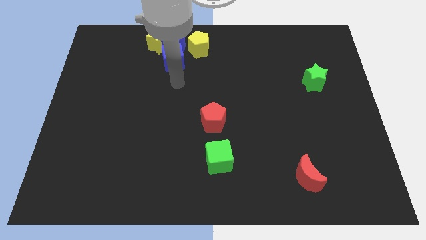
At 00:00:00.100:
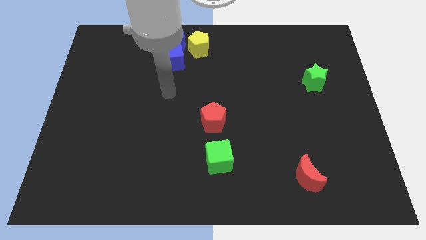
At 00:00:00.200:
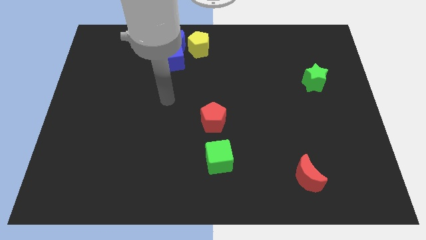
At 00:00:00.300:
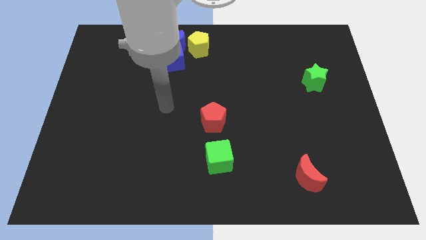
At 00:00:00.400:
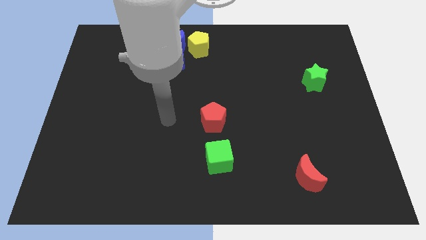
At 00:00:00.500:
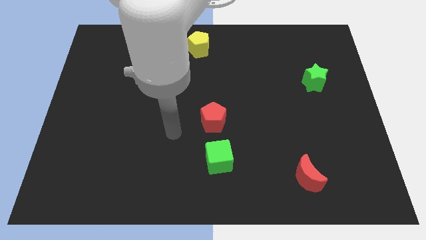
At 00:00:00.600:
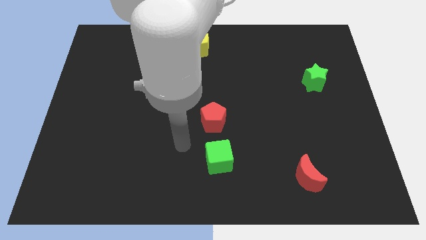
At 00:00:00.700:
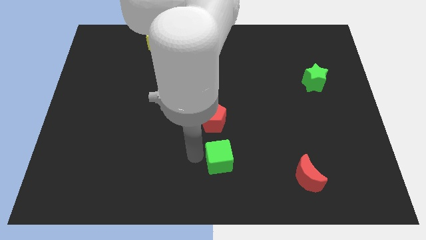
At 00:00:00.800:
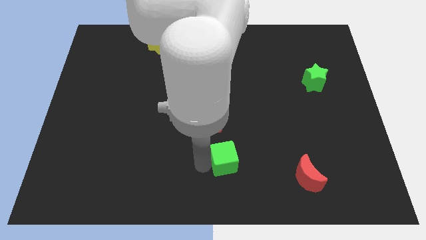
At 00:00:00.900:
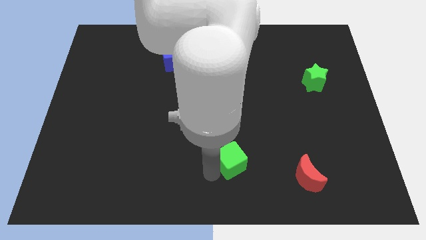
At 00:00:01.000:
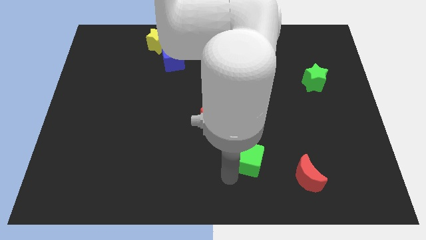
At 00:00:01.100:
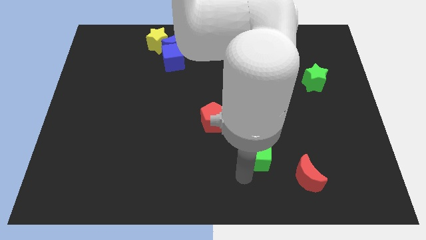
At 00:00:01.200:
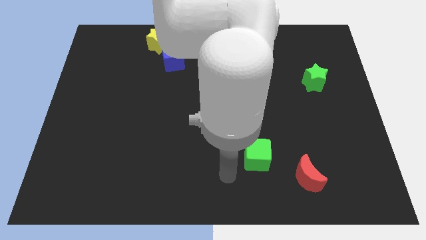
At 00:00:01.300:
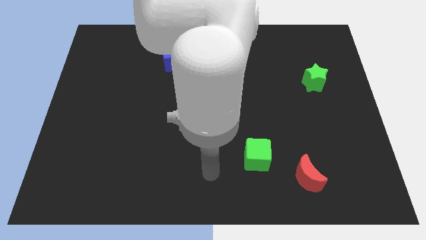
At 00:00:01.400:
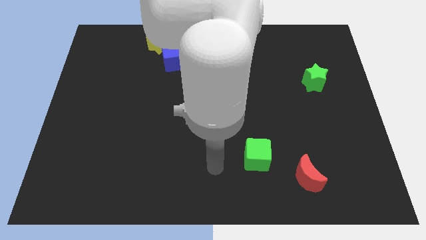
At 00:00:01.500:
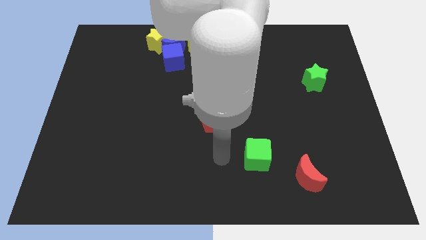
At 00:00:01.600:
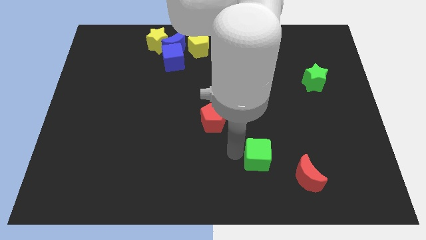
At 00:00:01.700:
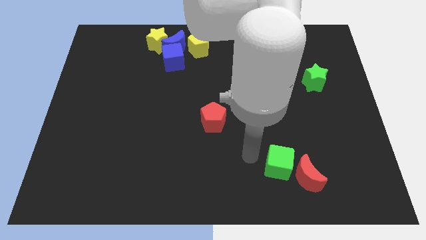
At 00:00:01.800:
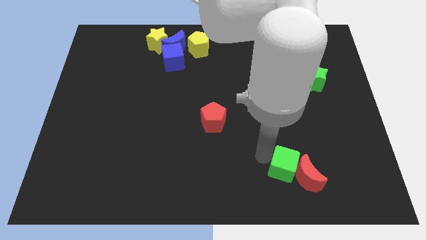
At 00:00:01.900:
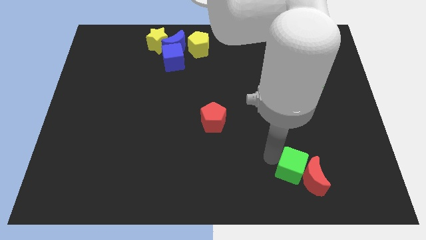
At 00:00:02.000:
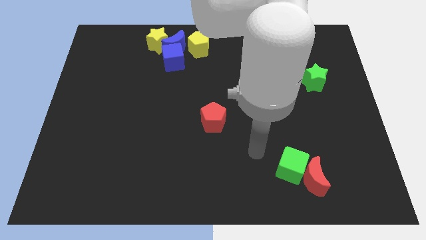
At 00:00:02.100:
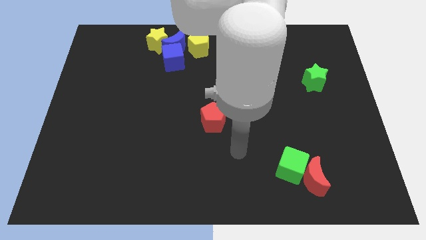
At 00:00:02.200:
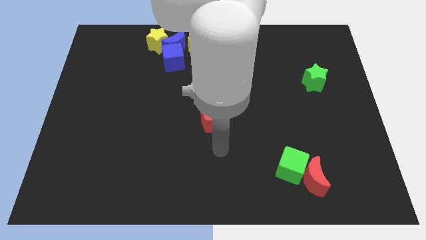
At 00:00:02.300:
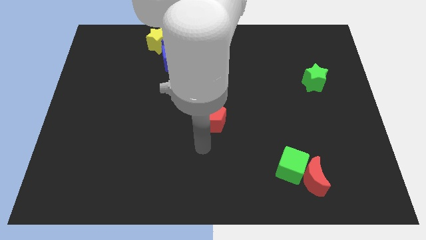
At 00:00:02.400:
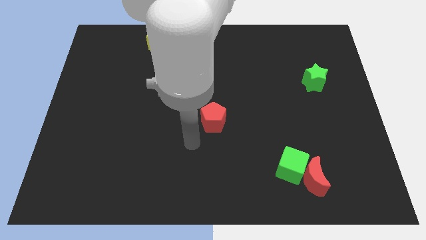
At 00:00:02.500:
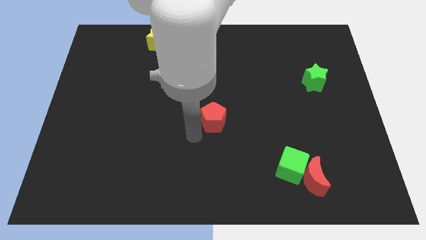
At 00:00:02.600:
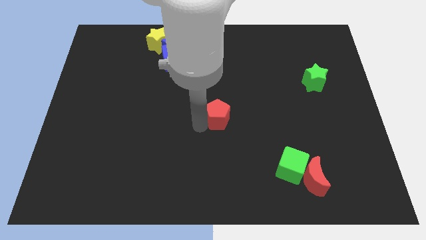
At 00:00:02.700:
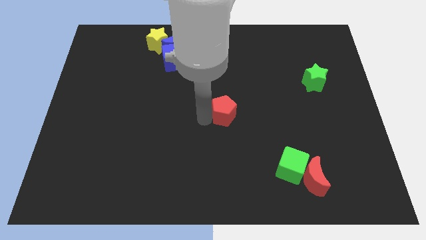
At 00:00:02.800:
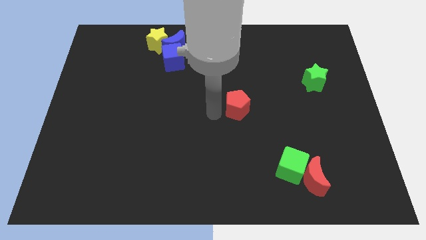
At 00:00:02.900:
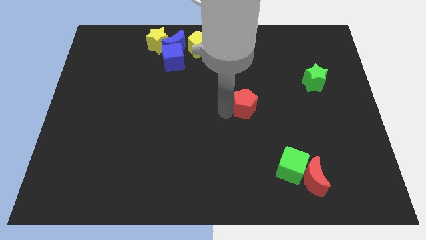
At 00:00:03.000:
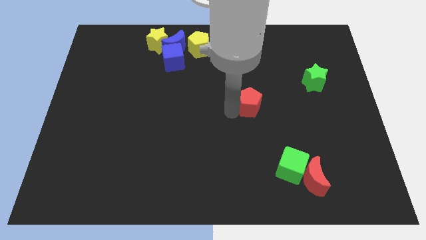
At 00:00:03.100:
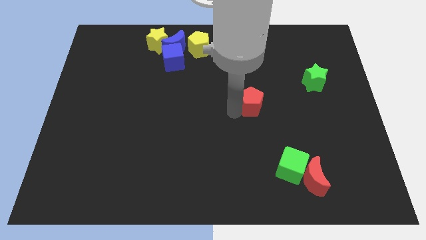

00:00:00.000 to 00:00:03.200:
push the green cube into the red crescent

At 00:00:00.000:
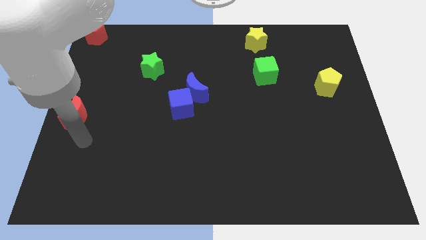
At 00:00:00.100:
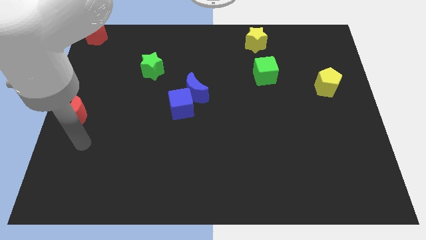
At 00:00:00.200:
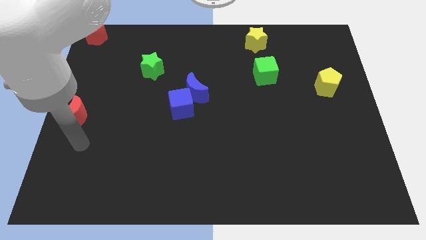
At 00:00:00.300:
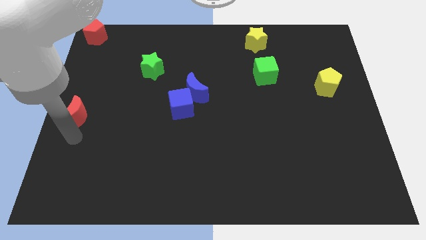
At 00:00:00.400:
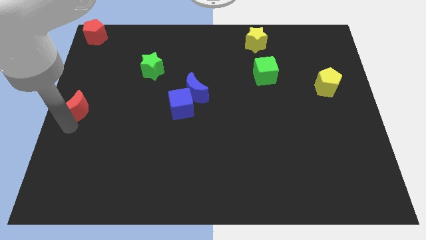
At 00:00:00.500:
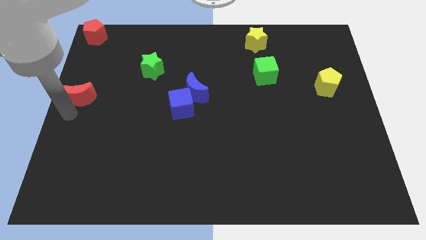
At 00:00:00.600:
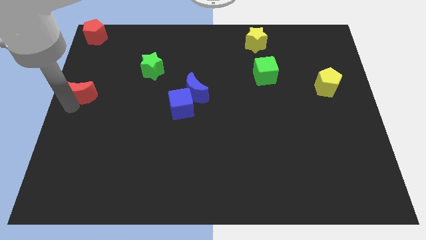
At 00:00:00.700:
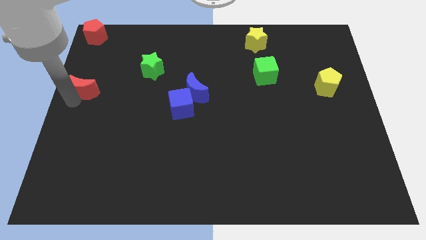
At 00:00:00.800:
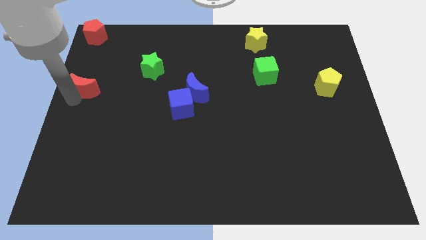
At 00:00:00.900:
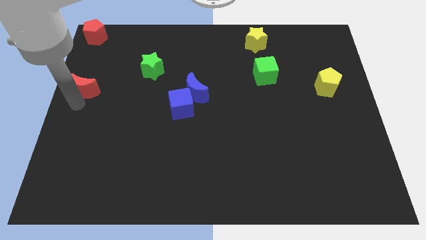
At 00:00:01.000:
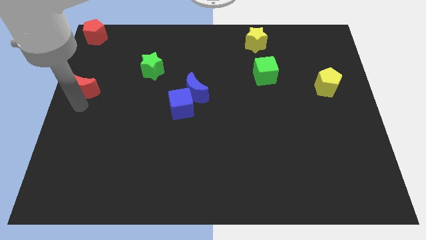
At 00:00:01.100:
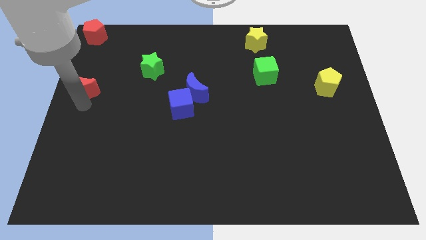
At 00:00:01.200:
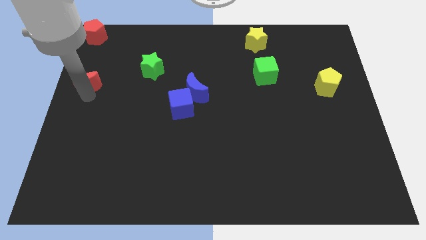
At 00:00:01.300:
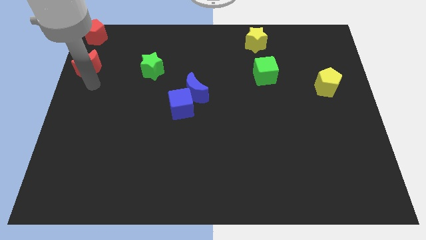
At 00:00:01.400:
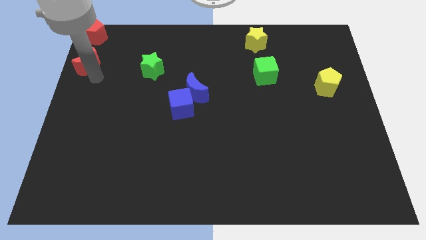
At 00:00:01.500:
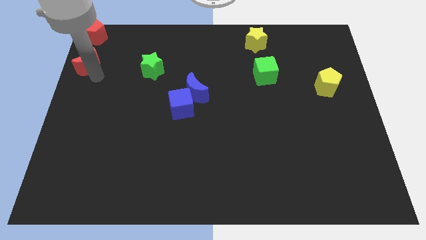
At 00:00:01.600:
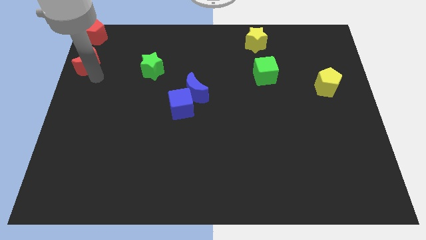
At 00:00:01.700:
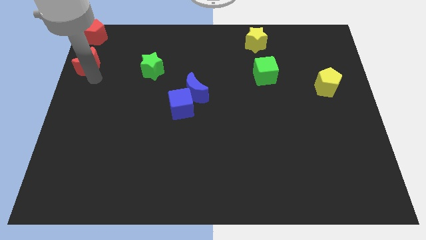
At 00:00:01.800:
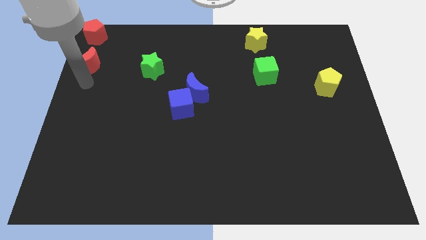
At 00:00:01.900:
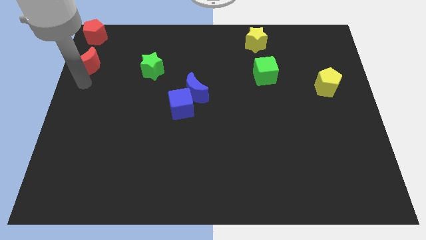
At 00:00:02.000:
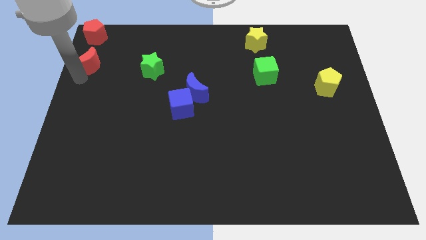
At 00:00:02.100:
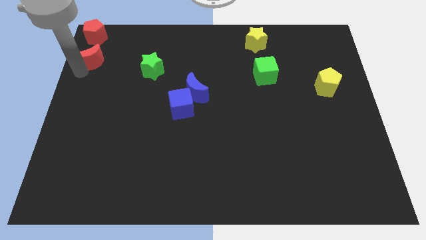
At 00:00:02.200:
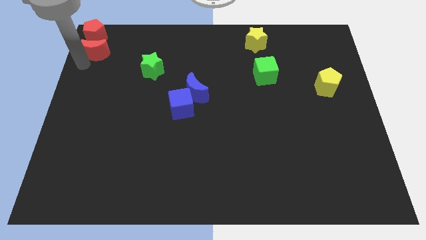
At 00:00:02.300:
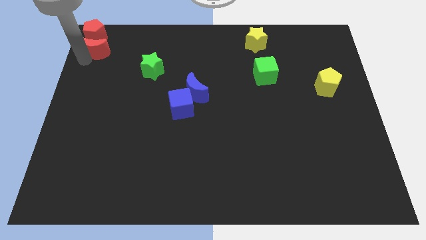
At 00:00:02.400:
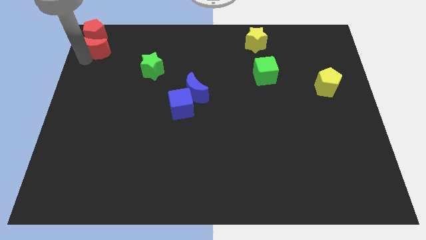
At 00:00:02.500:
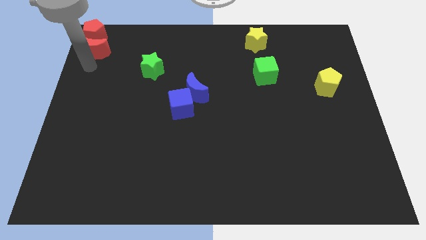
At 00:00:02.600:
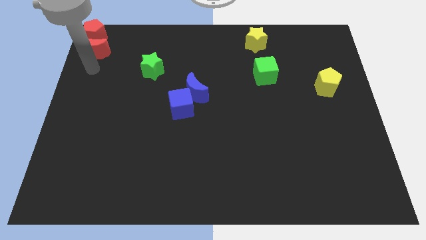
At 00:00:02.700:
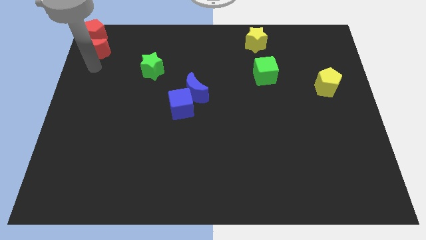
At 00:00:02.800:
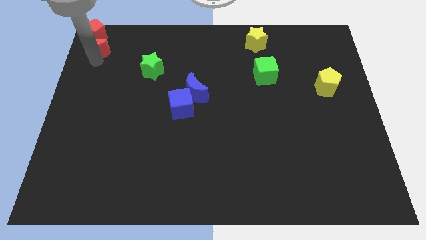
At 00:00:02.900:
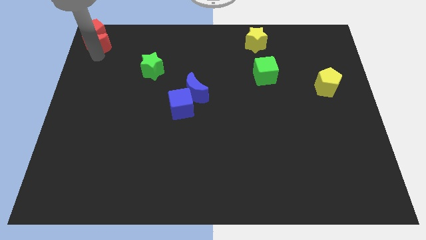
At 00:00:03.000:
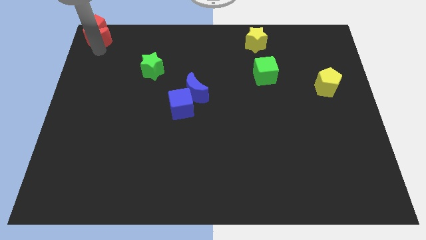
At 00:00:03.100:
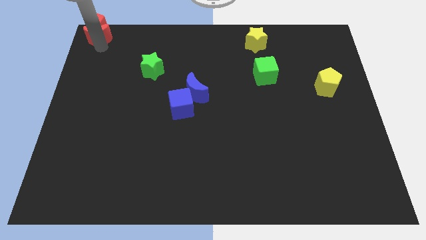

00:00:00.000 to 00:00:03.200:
push the red crescent into the red pentagon

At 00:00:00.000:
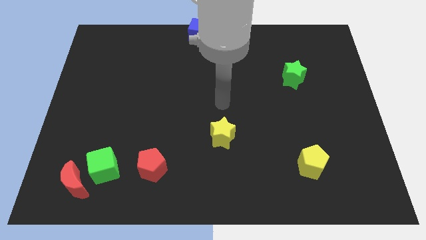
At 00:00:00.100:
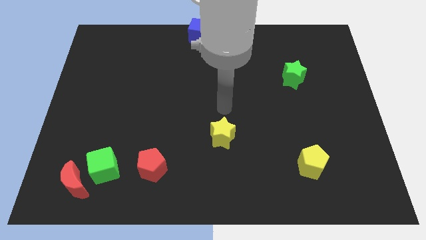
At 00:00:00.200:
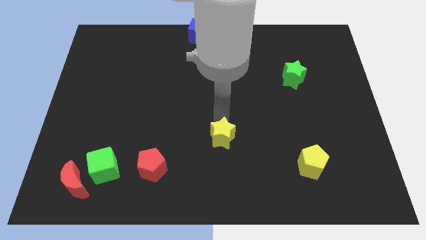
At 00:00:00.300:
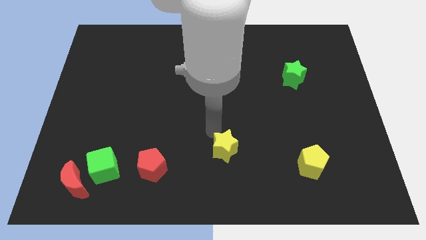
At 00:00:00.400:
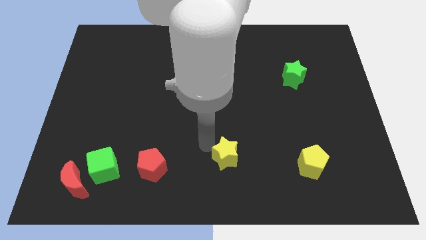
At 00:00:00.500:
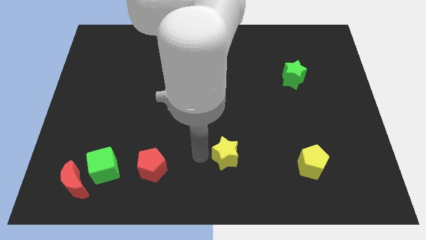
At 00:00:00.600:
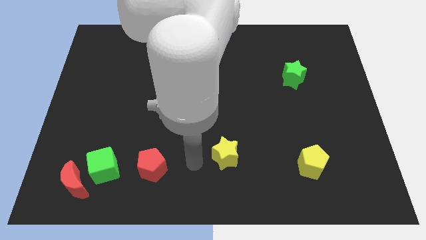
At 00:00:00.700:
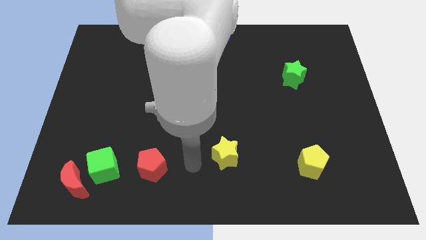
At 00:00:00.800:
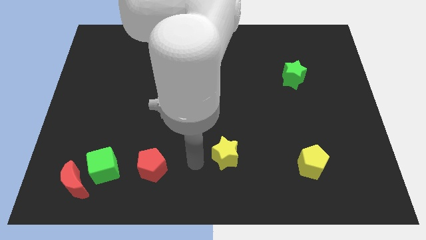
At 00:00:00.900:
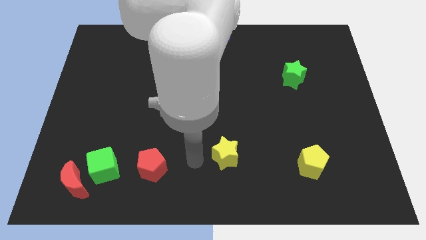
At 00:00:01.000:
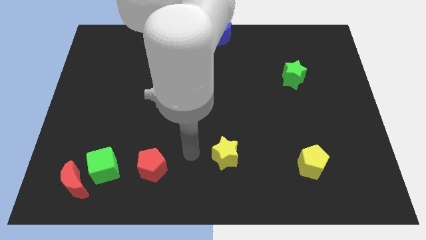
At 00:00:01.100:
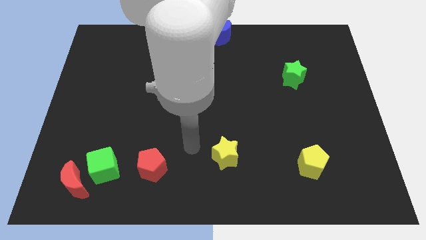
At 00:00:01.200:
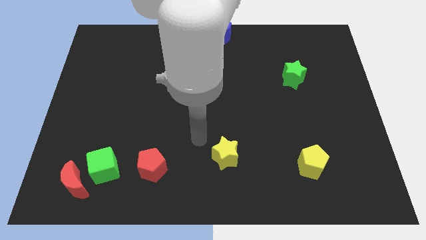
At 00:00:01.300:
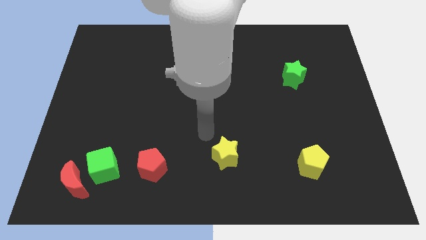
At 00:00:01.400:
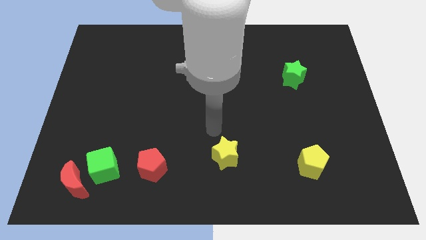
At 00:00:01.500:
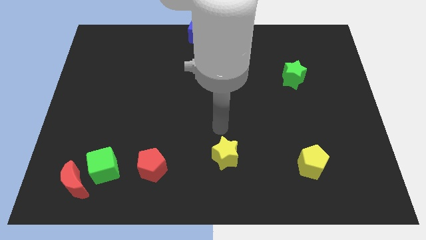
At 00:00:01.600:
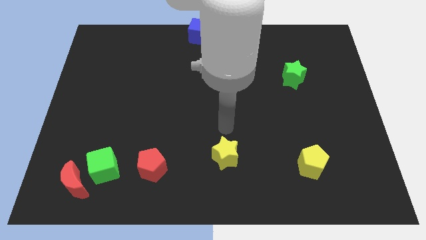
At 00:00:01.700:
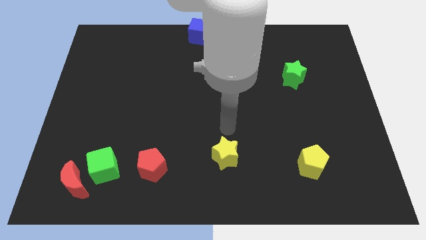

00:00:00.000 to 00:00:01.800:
place the yellow star between red and yellow pentagon

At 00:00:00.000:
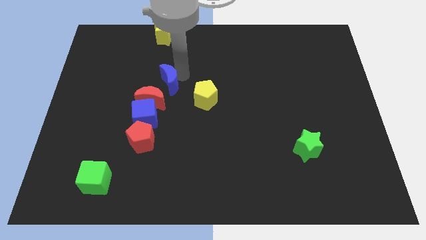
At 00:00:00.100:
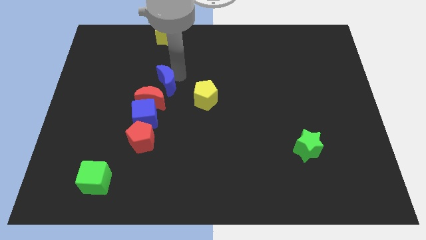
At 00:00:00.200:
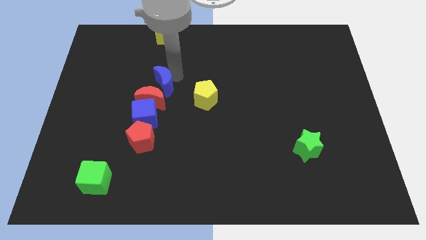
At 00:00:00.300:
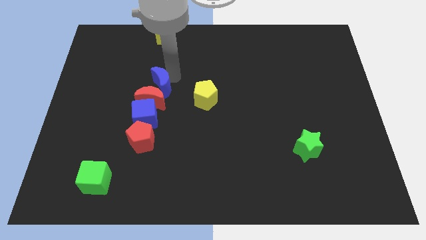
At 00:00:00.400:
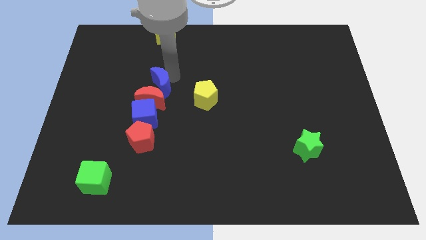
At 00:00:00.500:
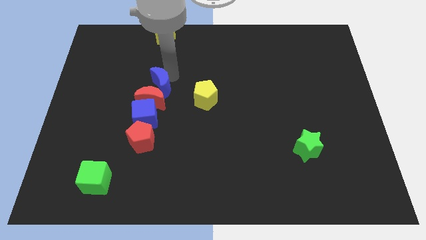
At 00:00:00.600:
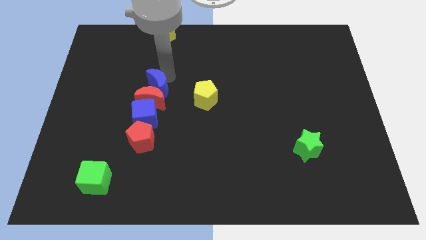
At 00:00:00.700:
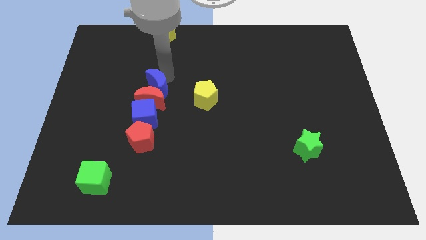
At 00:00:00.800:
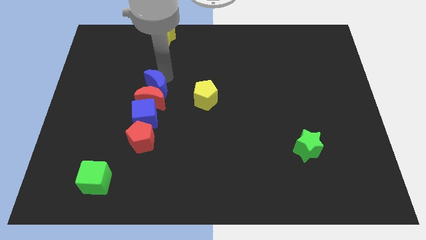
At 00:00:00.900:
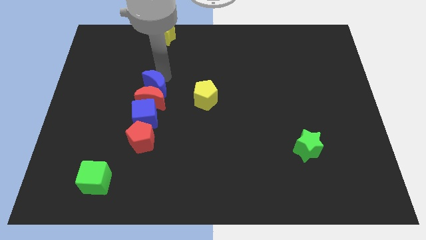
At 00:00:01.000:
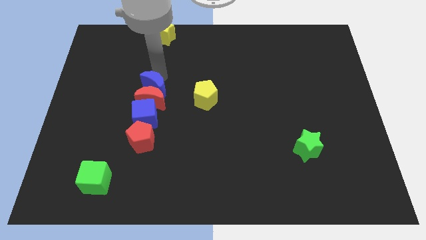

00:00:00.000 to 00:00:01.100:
slide blue moon on top of red moon
